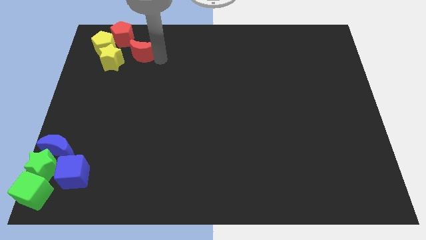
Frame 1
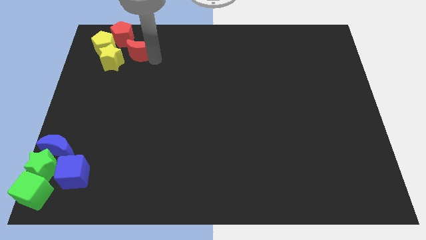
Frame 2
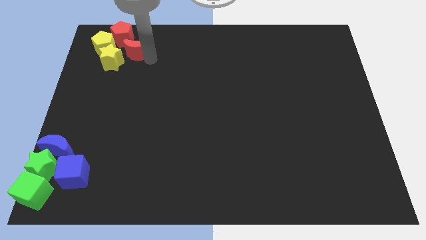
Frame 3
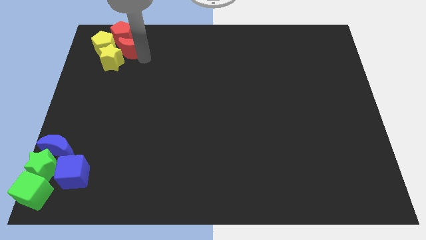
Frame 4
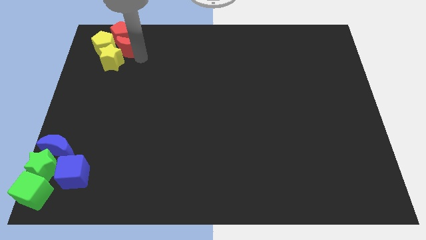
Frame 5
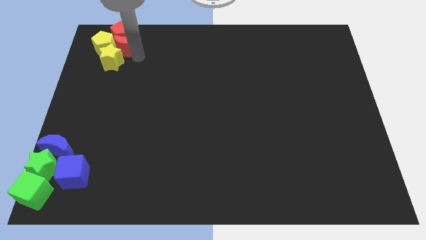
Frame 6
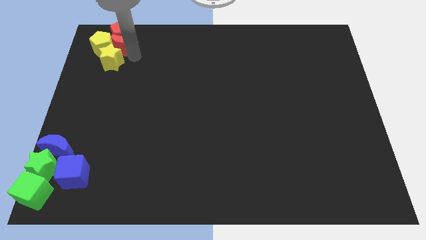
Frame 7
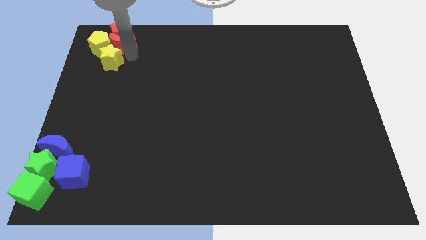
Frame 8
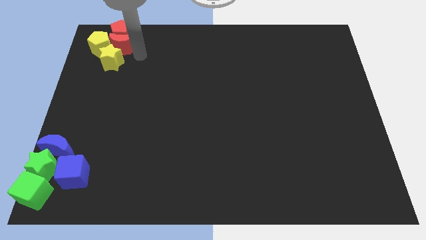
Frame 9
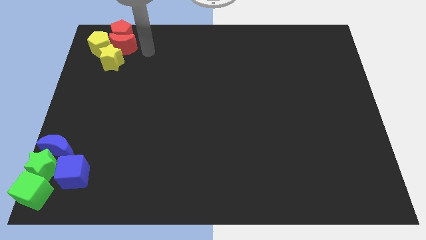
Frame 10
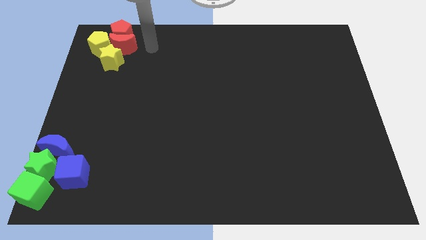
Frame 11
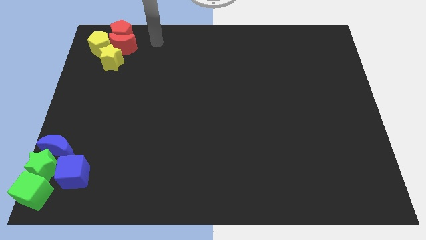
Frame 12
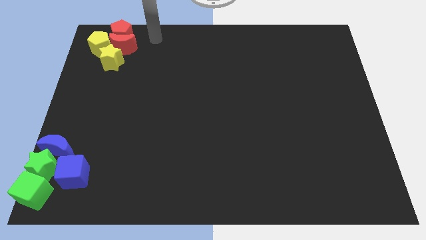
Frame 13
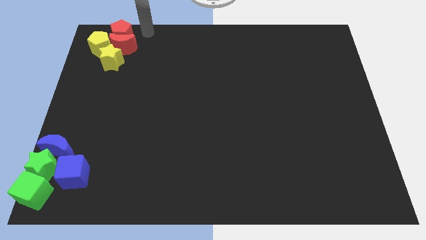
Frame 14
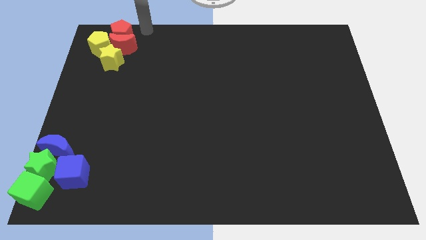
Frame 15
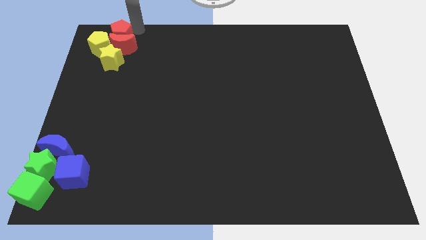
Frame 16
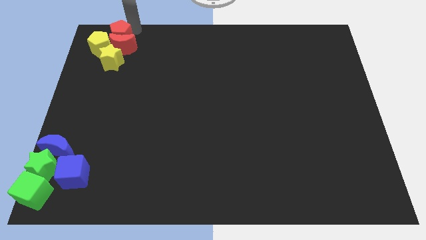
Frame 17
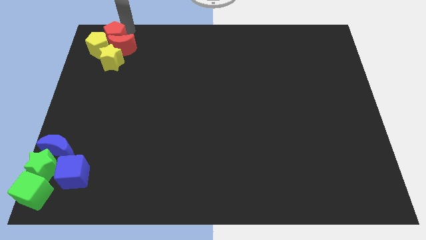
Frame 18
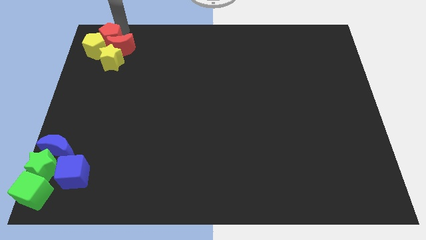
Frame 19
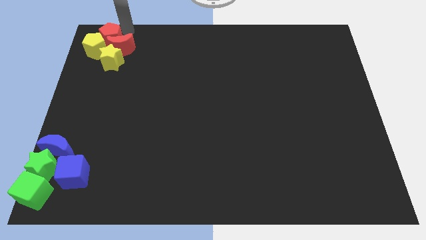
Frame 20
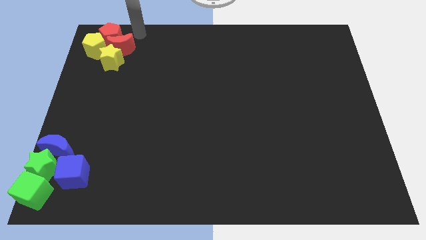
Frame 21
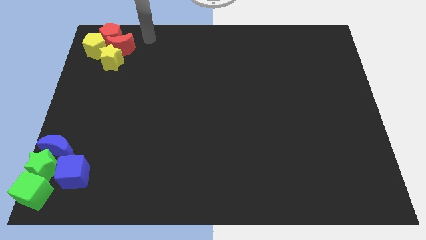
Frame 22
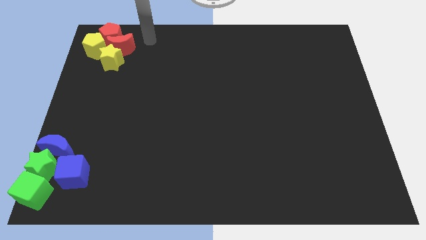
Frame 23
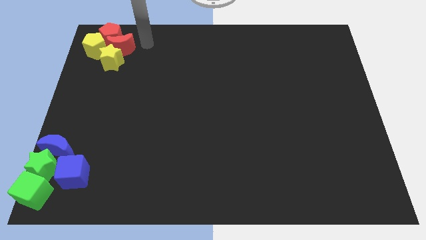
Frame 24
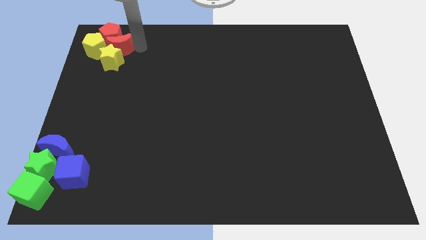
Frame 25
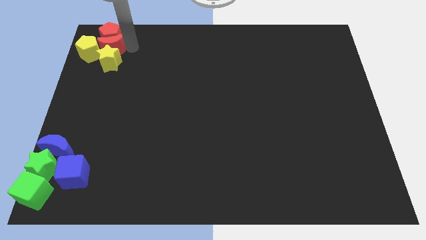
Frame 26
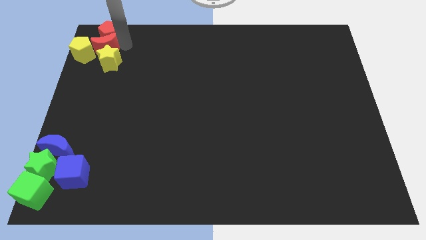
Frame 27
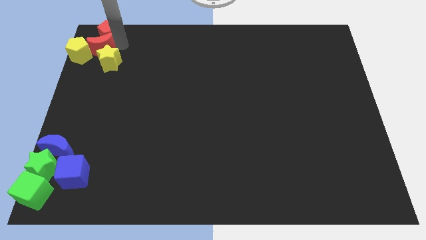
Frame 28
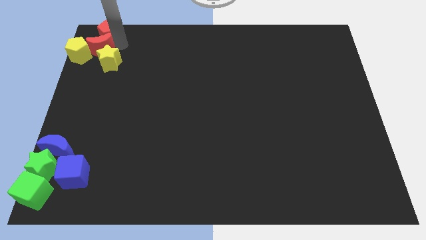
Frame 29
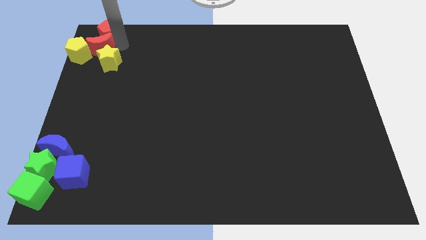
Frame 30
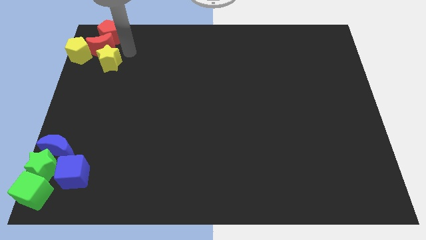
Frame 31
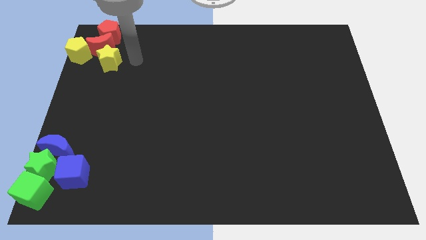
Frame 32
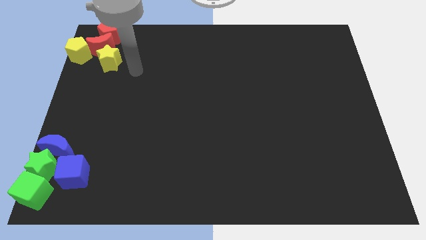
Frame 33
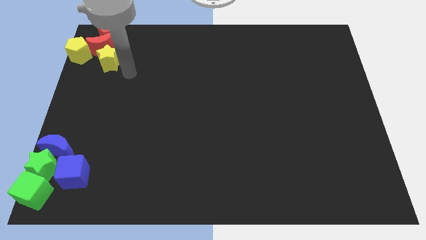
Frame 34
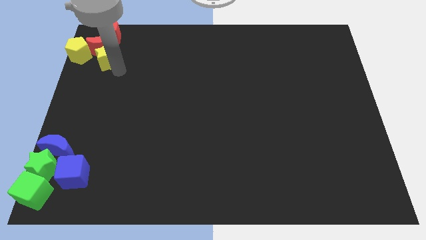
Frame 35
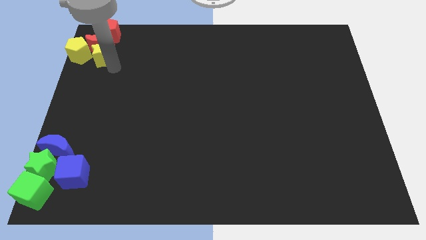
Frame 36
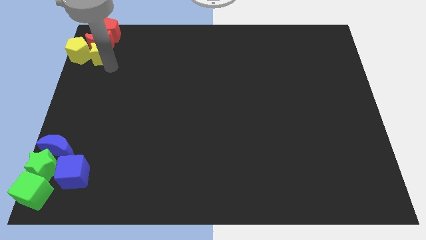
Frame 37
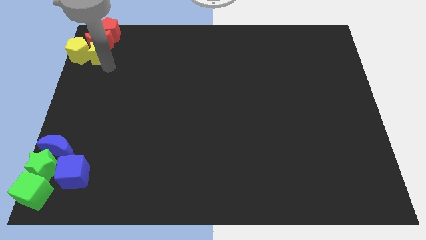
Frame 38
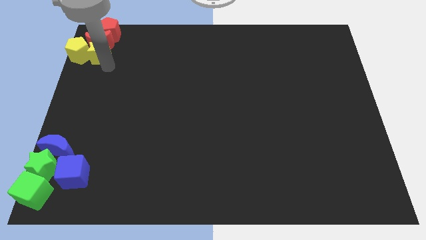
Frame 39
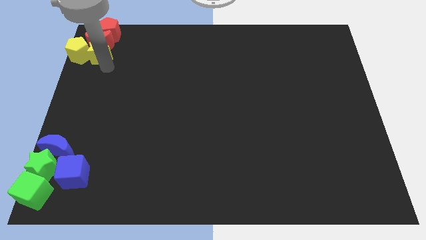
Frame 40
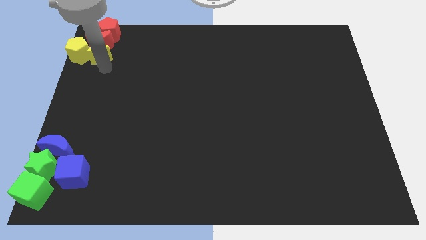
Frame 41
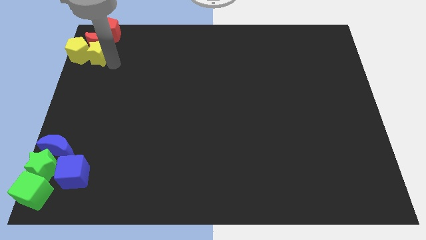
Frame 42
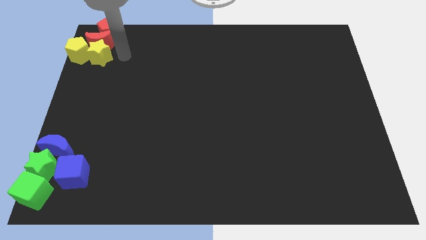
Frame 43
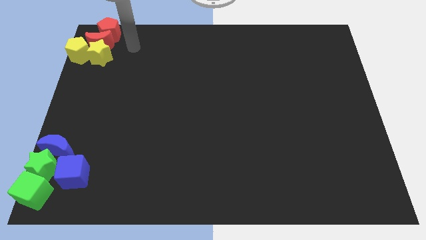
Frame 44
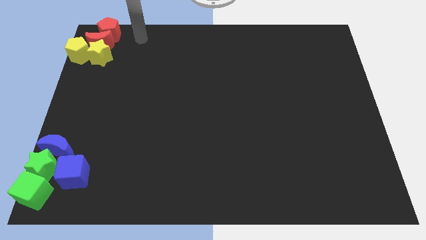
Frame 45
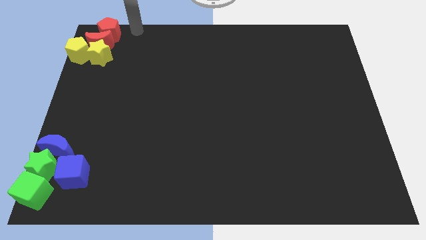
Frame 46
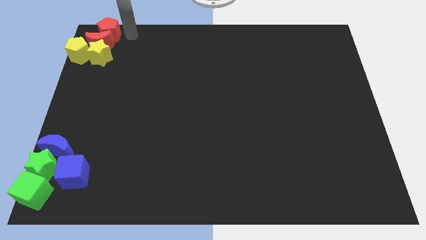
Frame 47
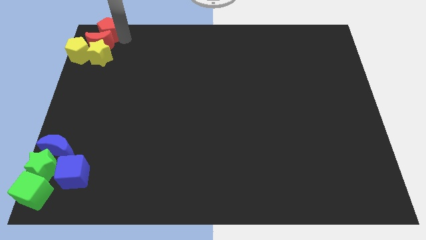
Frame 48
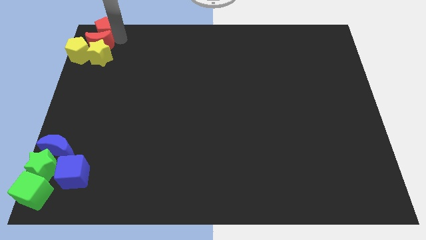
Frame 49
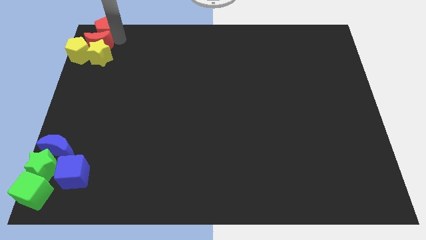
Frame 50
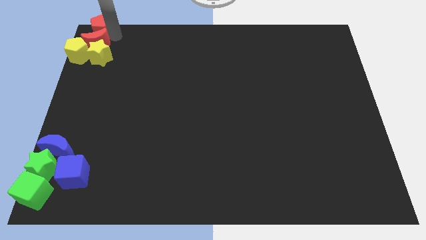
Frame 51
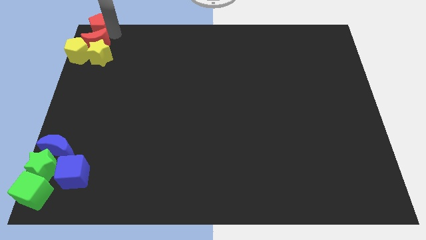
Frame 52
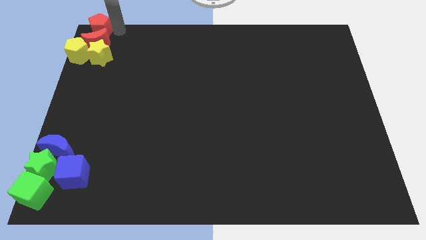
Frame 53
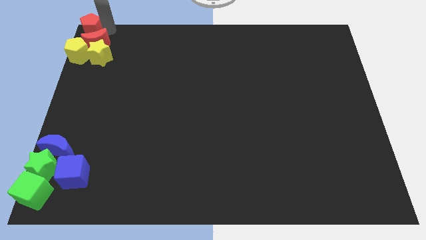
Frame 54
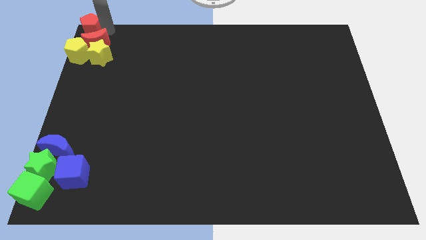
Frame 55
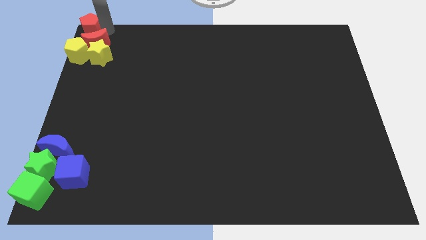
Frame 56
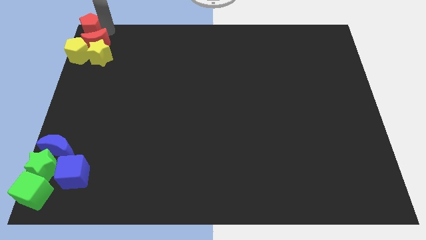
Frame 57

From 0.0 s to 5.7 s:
move the red pentagon to the top left corner of the board

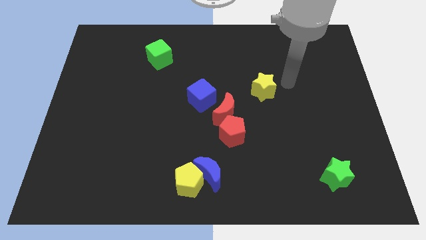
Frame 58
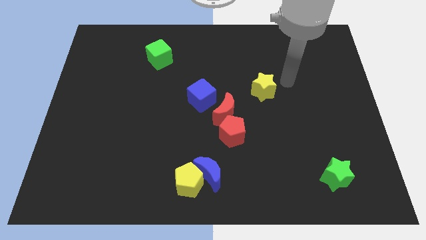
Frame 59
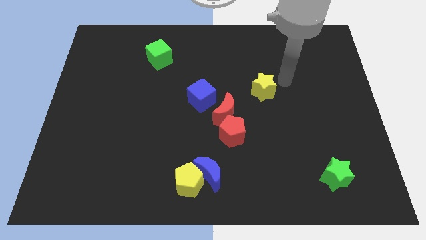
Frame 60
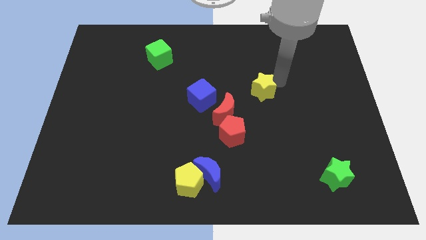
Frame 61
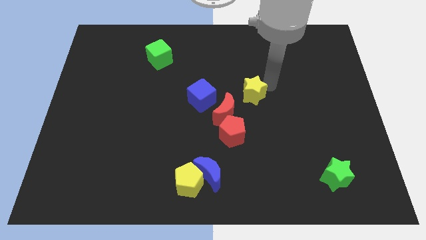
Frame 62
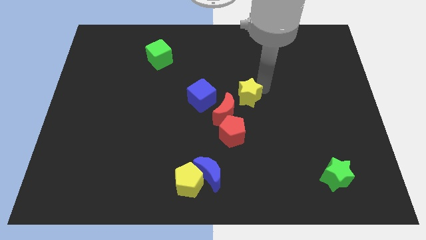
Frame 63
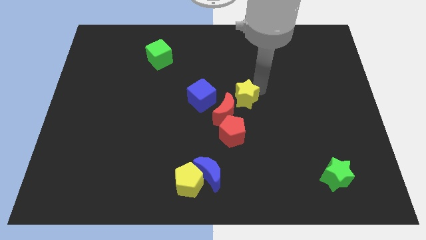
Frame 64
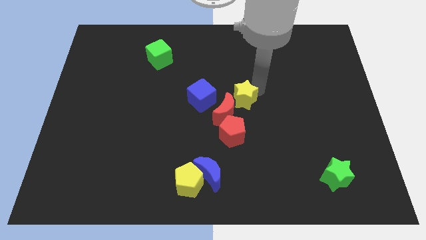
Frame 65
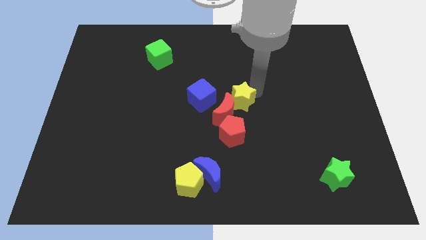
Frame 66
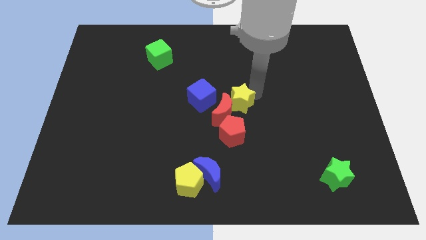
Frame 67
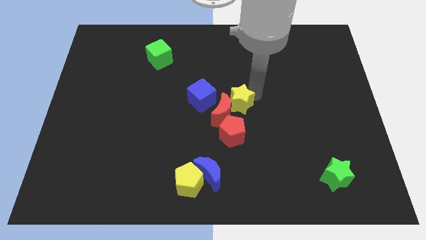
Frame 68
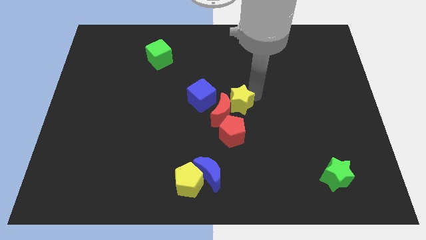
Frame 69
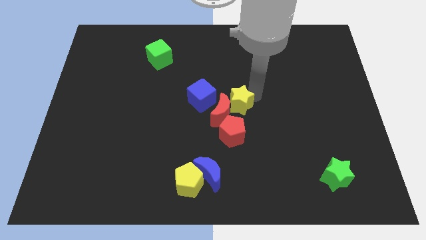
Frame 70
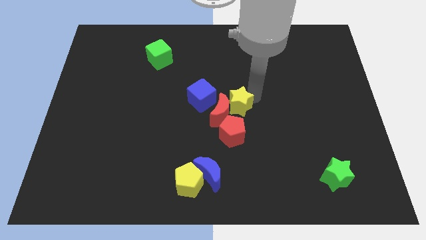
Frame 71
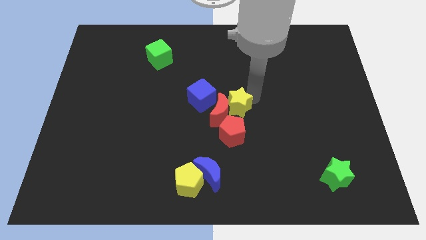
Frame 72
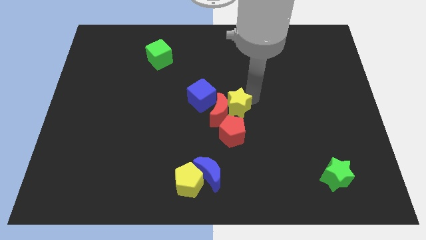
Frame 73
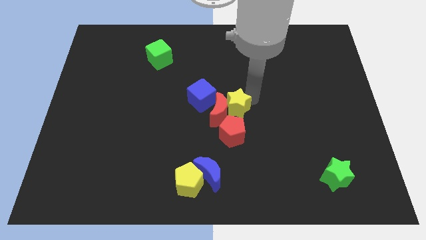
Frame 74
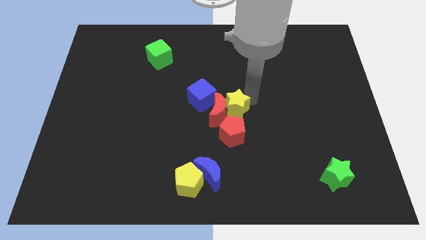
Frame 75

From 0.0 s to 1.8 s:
move the yellow pentagon into the red crescent

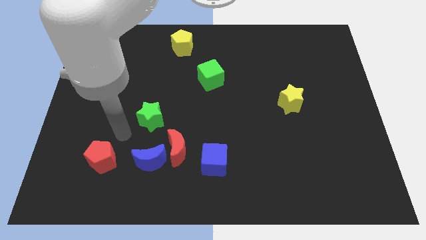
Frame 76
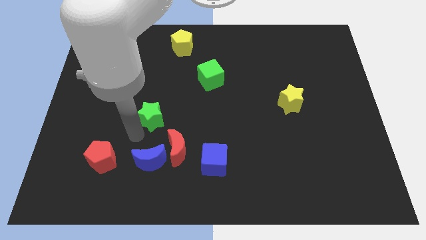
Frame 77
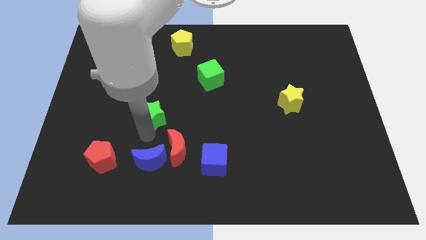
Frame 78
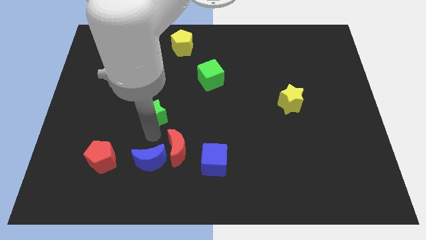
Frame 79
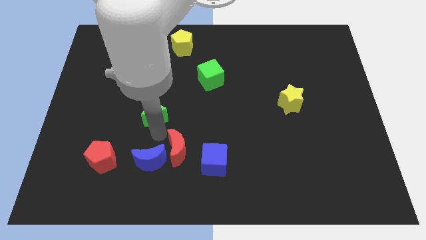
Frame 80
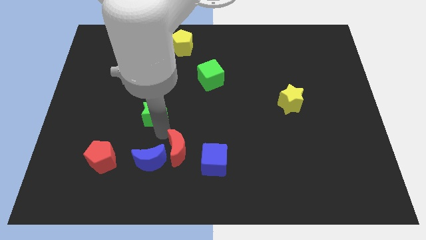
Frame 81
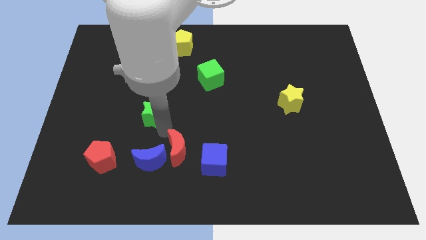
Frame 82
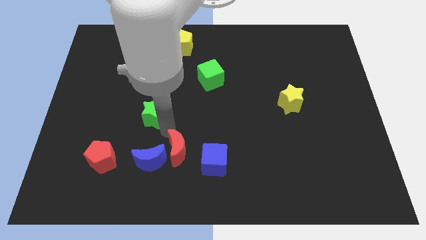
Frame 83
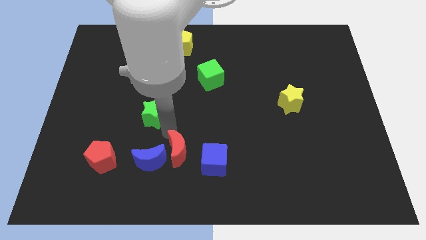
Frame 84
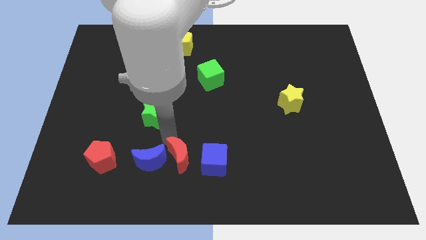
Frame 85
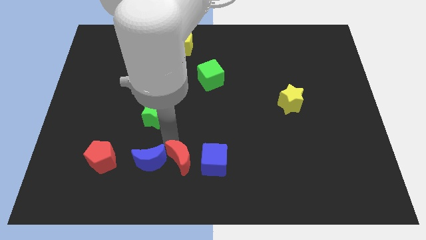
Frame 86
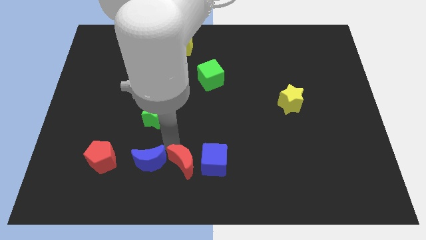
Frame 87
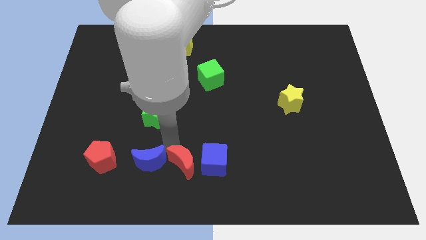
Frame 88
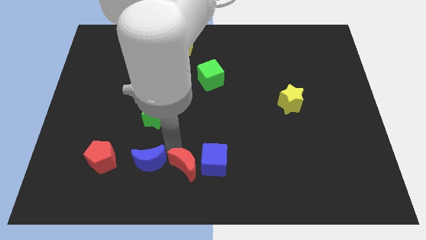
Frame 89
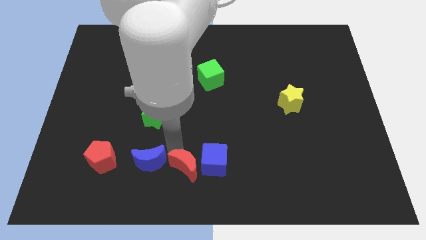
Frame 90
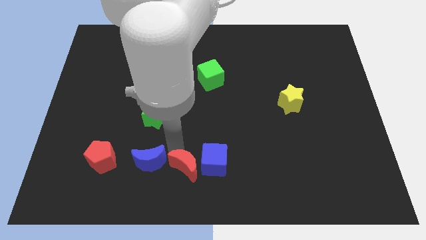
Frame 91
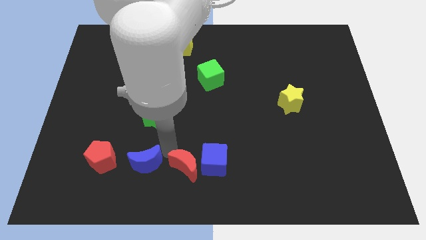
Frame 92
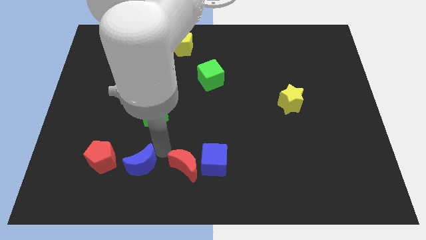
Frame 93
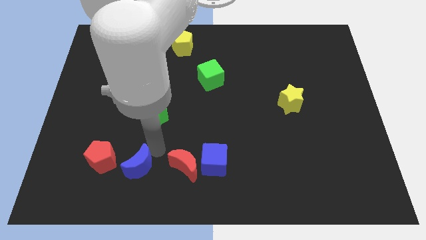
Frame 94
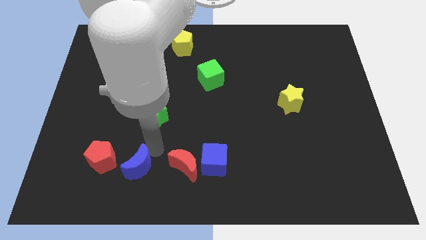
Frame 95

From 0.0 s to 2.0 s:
slightly move the red crescent towards the bottom
